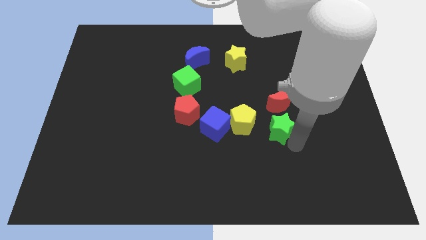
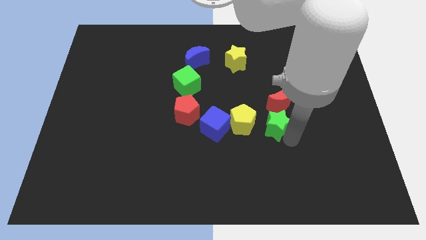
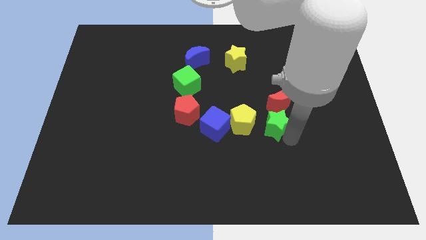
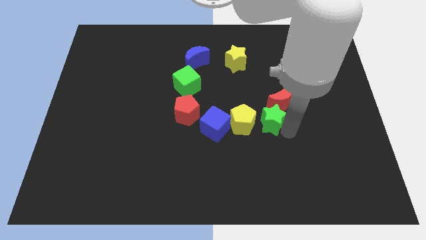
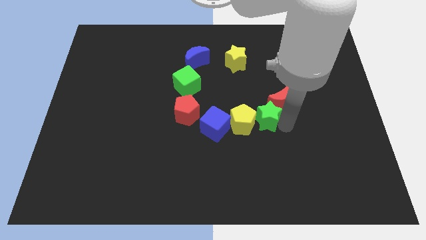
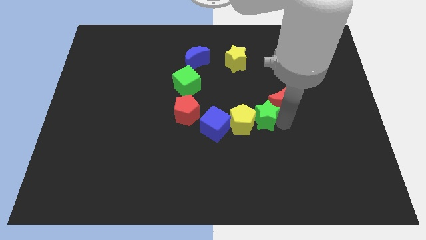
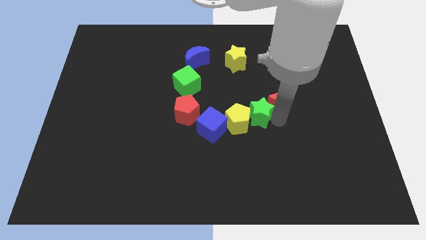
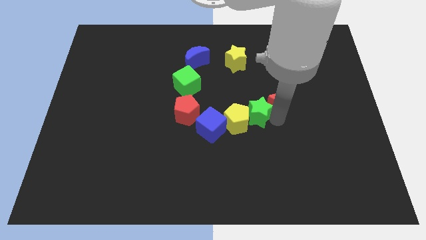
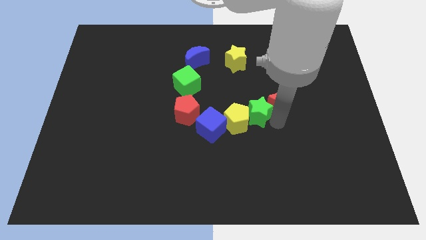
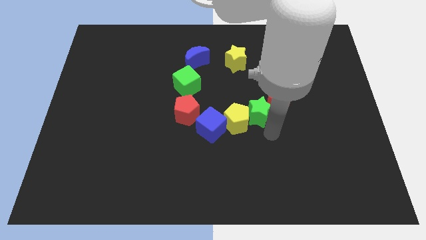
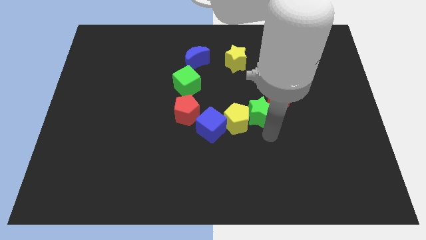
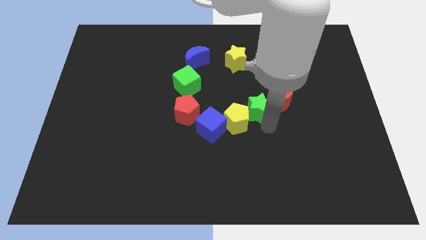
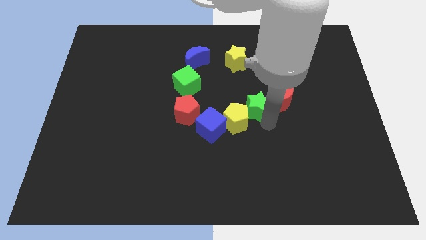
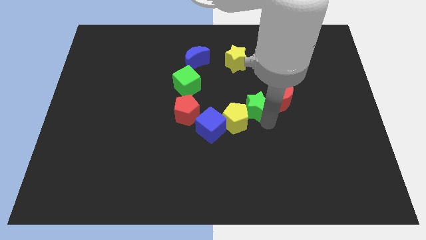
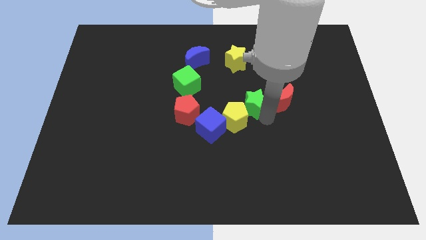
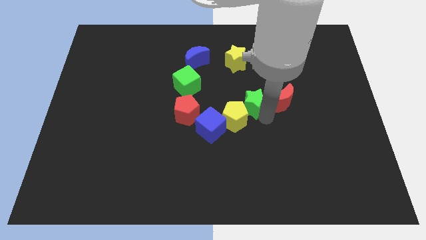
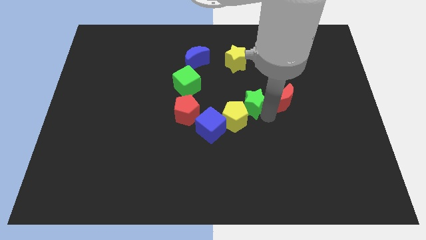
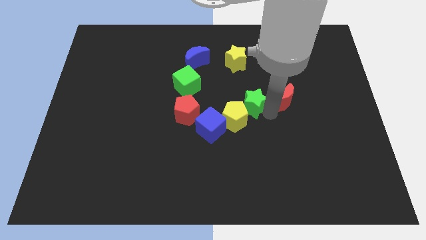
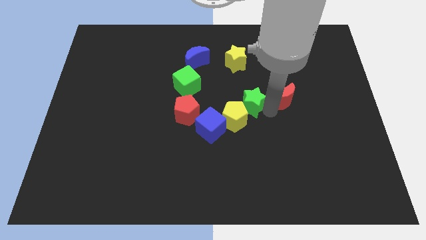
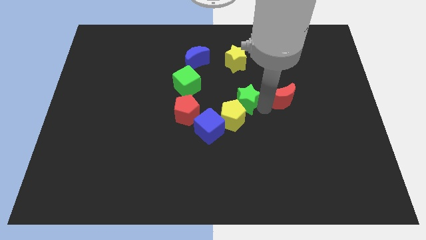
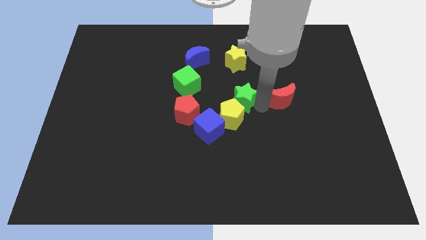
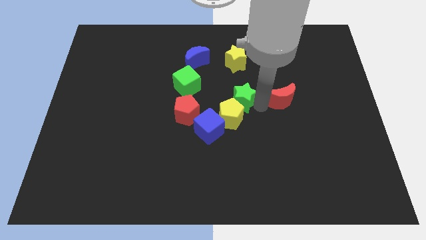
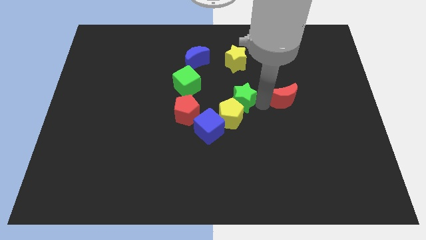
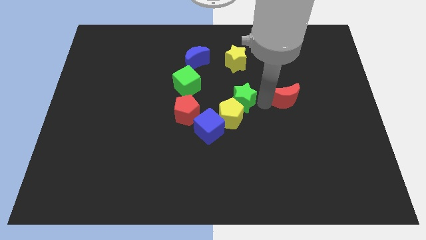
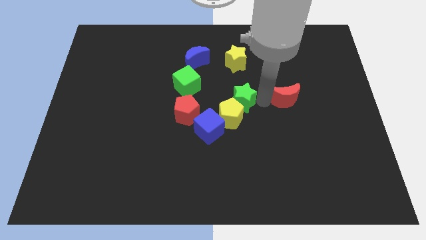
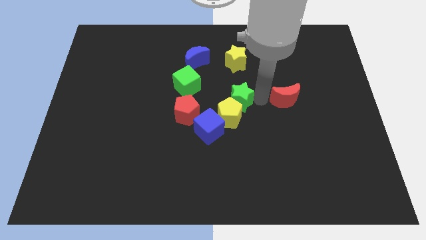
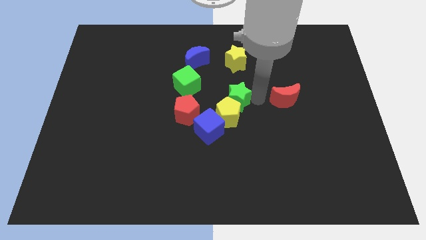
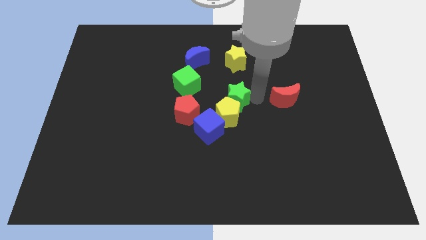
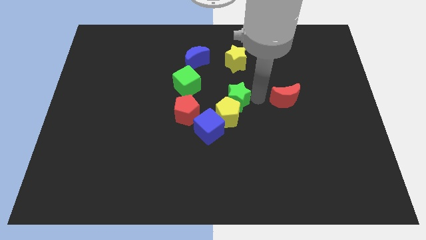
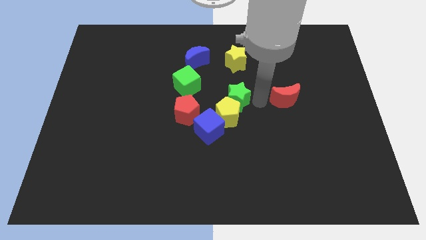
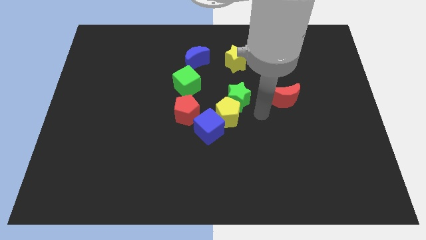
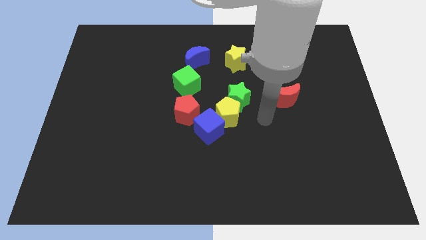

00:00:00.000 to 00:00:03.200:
place the green star and yellow pentagon below the yellow star

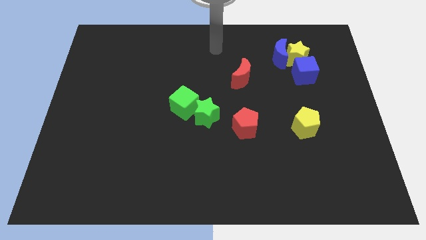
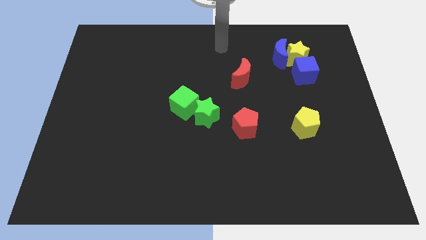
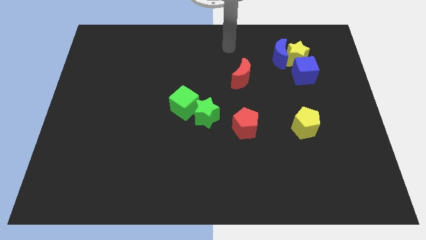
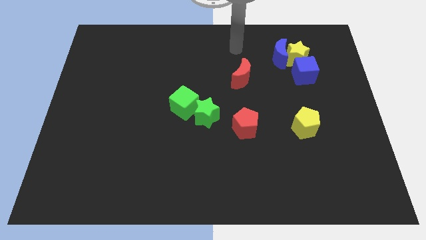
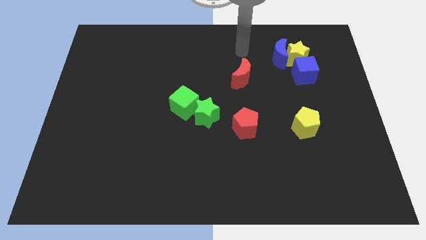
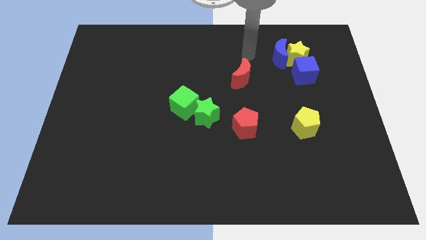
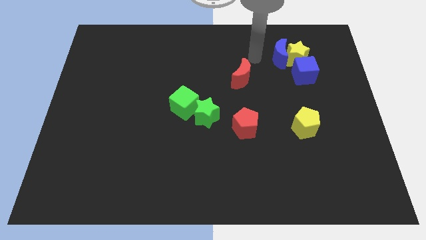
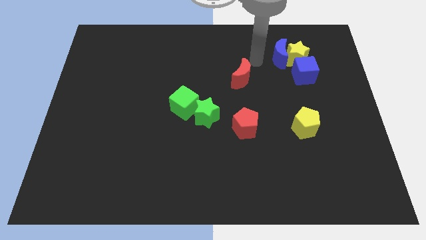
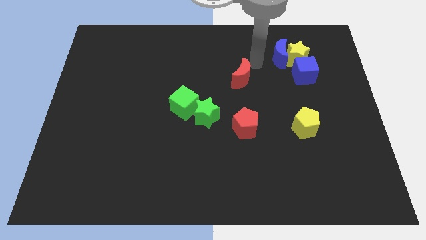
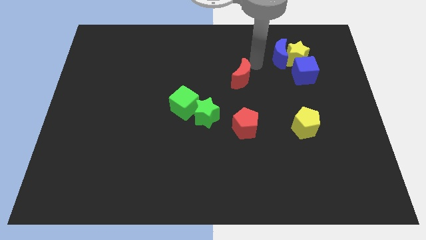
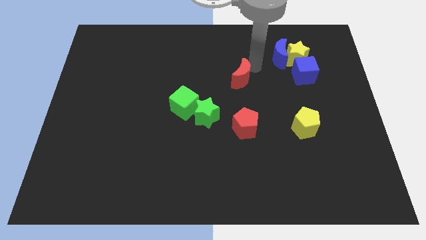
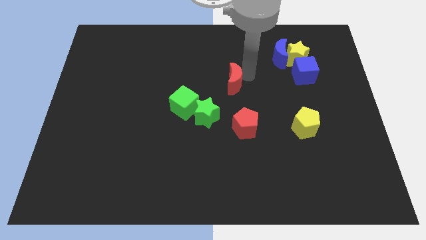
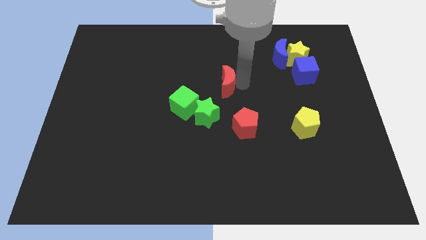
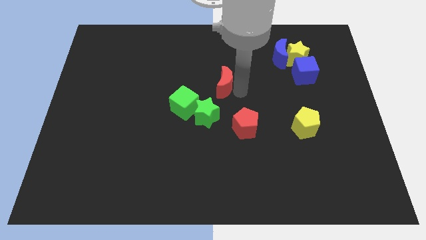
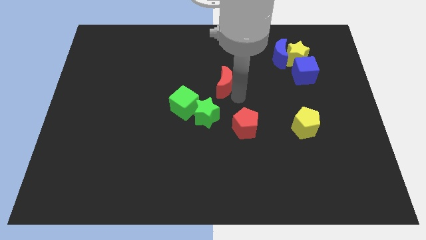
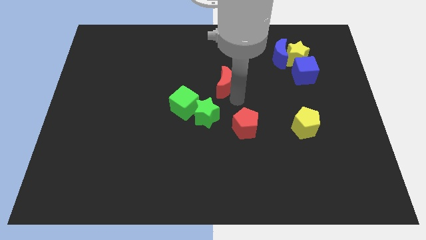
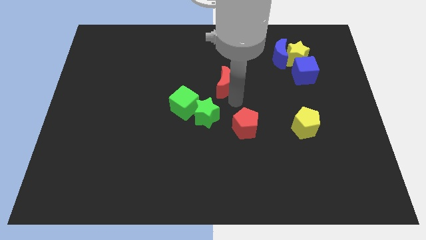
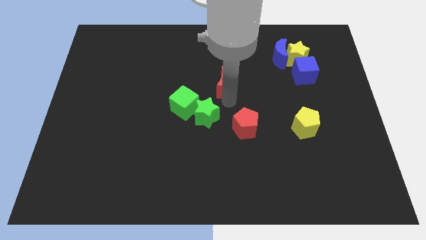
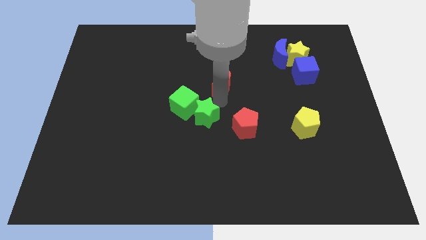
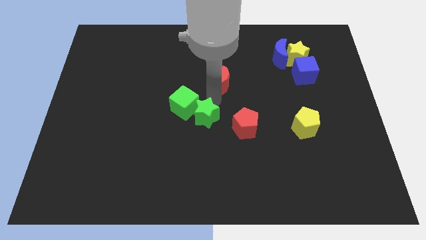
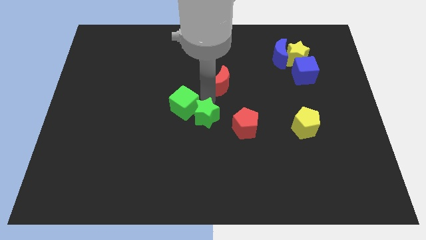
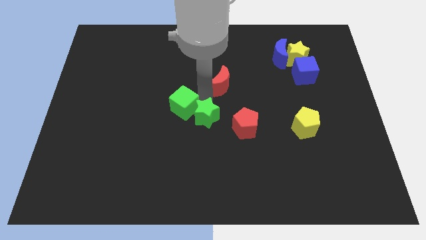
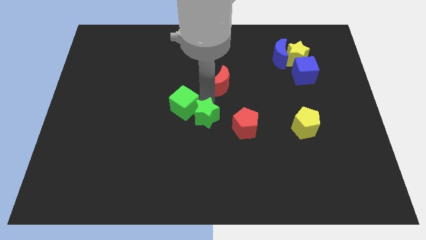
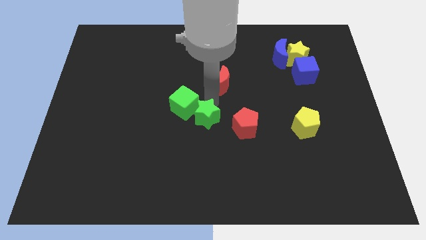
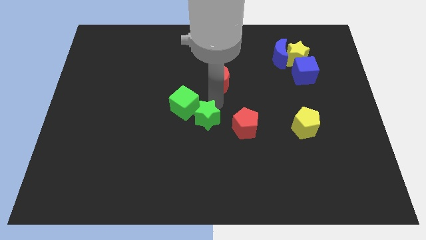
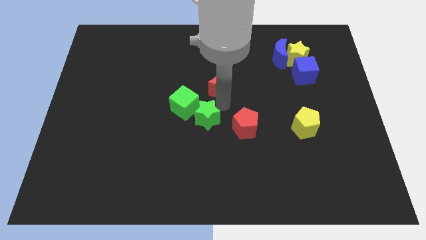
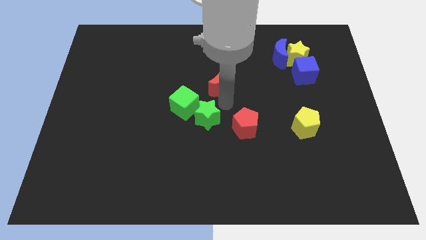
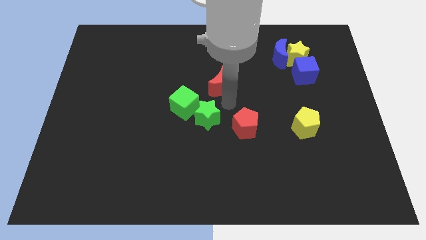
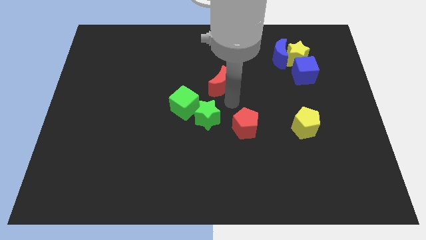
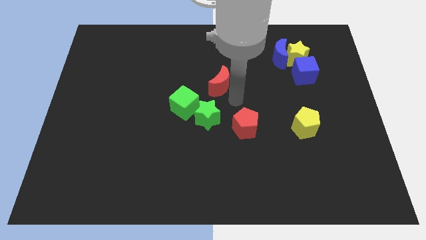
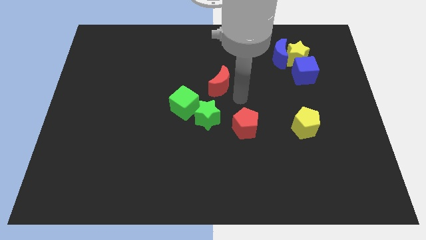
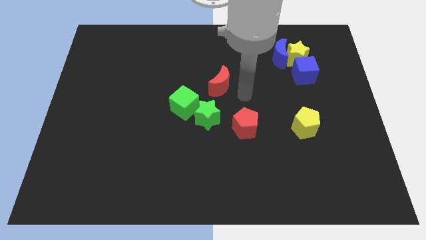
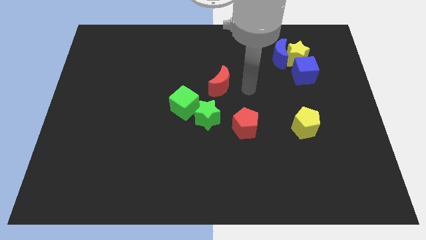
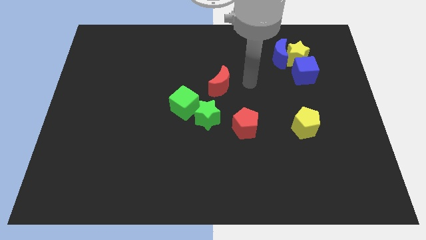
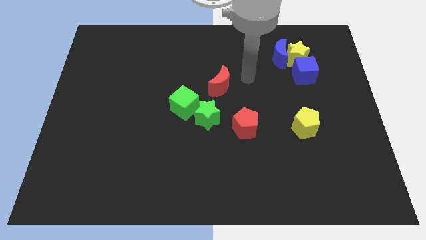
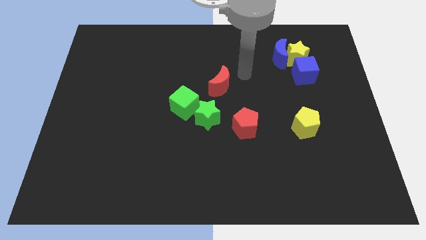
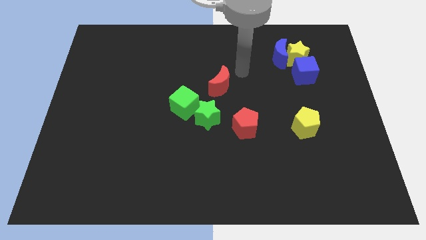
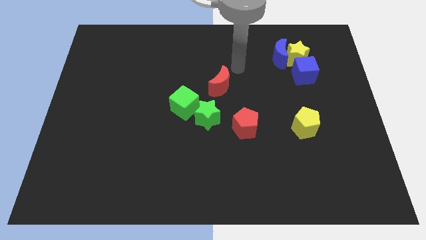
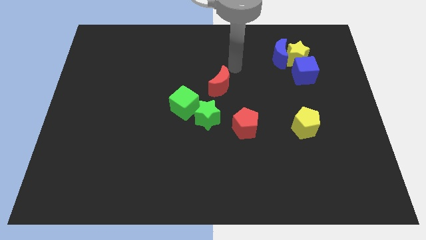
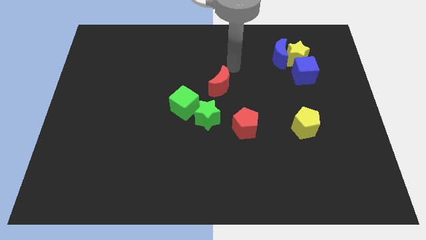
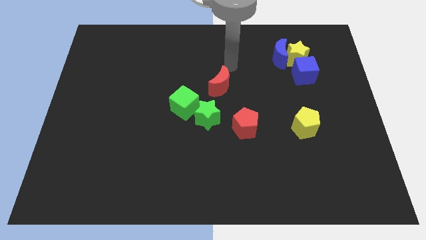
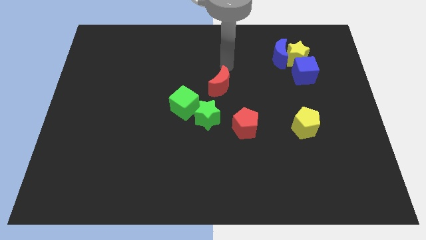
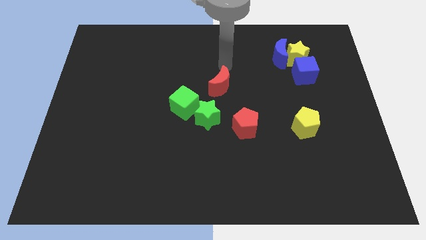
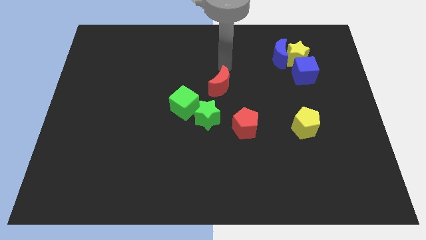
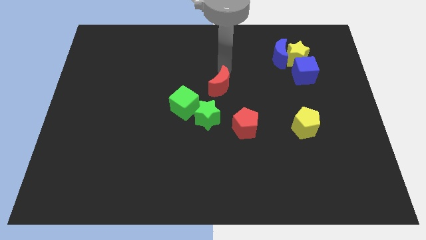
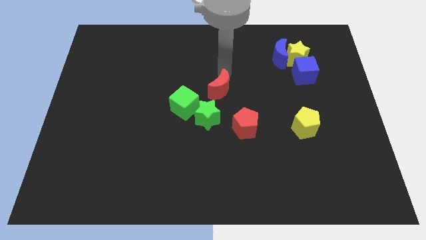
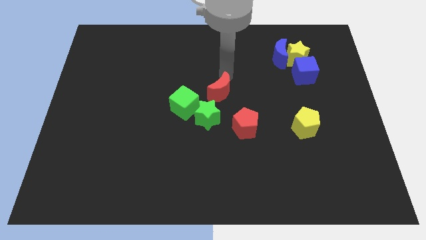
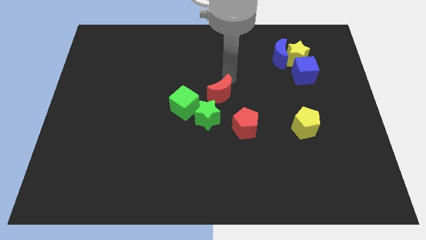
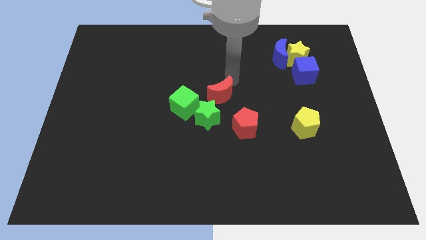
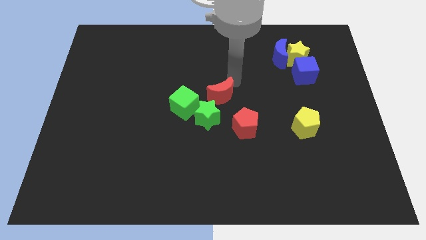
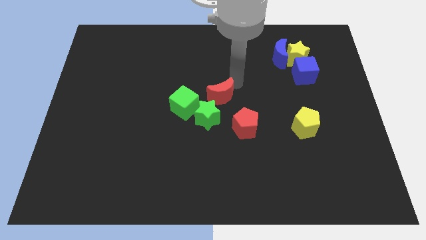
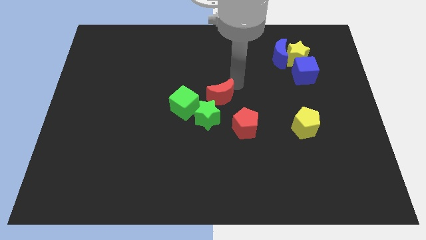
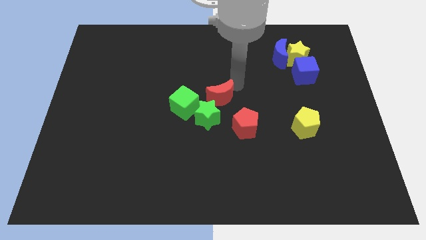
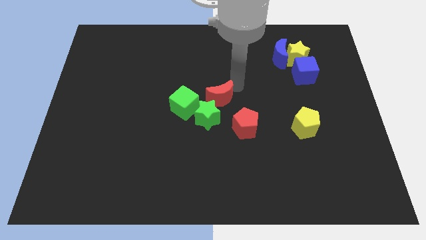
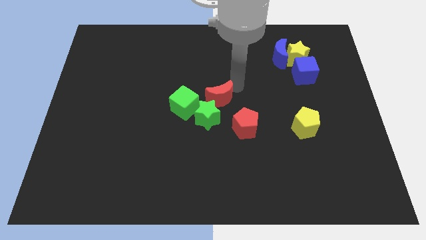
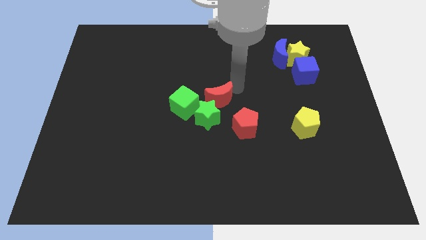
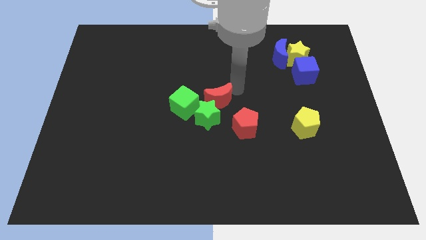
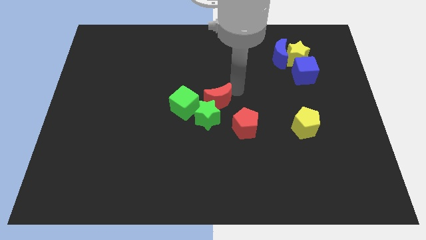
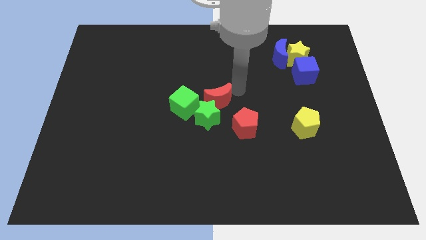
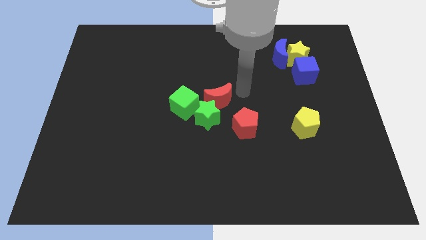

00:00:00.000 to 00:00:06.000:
push the red moon close to the green star at the center of the board
